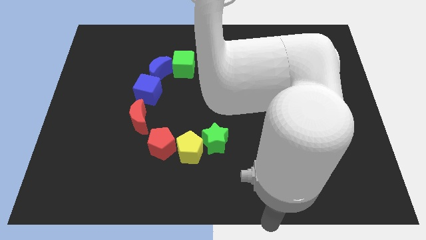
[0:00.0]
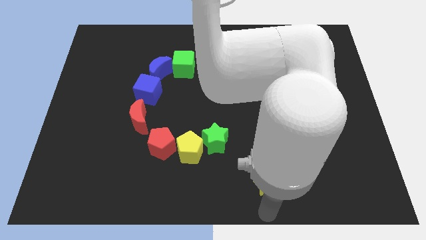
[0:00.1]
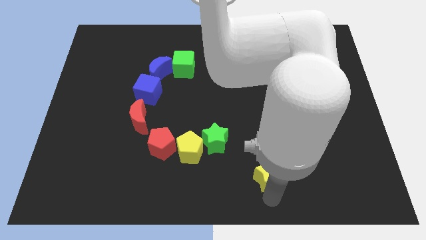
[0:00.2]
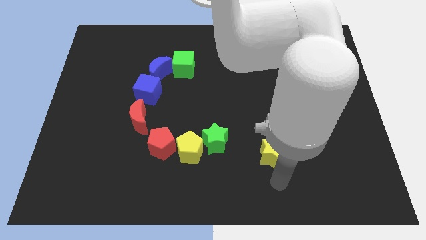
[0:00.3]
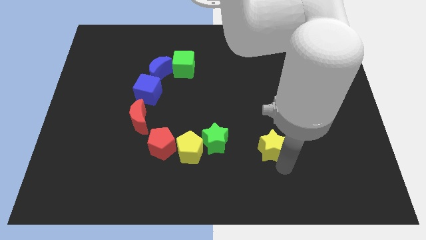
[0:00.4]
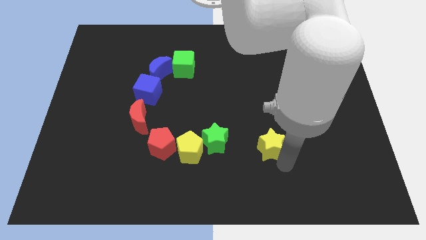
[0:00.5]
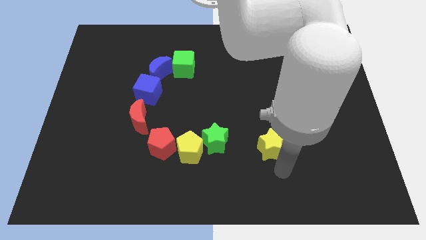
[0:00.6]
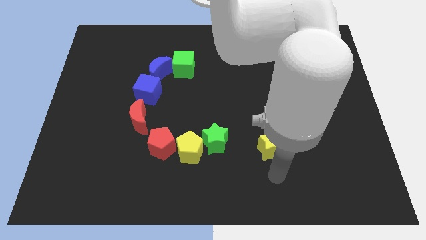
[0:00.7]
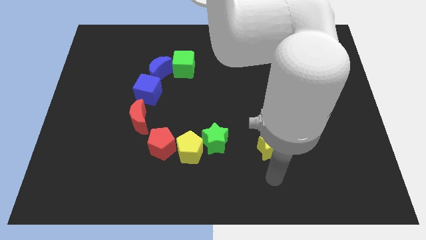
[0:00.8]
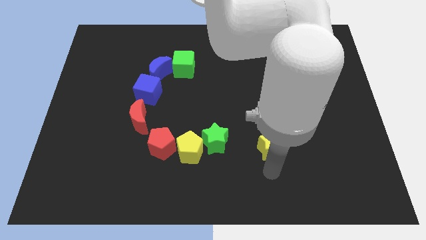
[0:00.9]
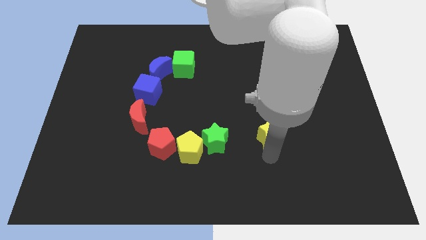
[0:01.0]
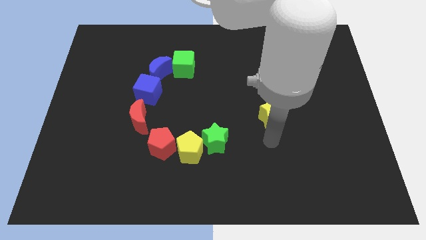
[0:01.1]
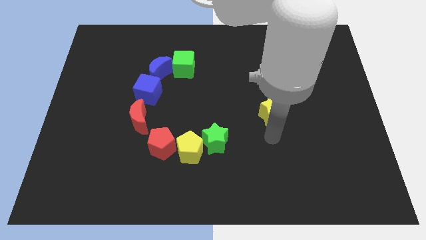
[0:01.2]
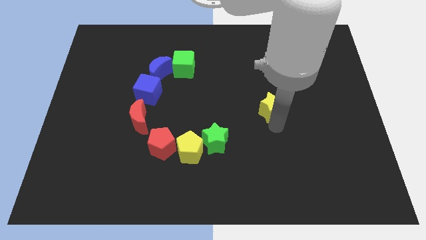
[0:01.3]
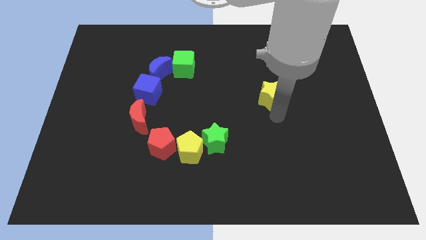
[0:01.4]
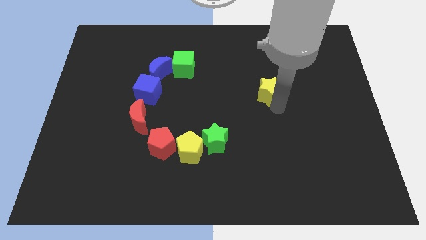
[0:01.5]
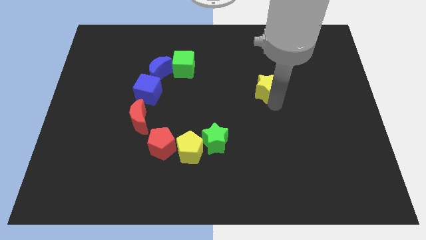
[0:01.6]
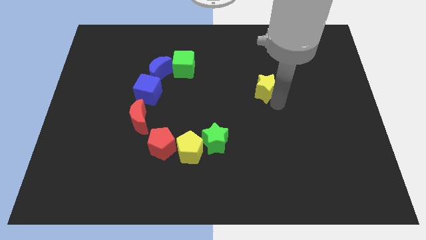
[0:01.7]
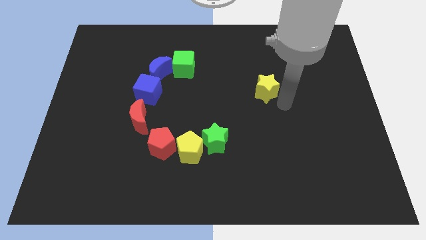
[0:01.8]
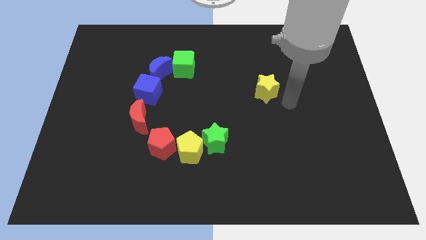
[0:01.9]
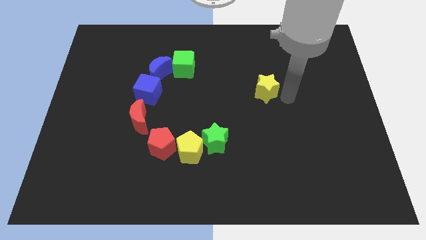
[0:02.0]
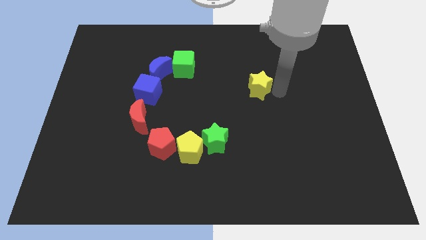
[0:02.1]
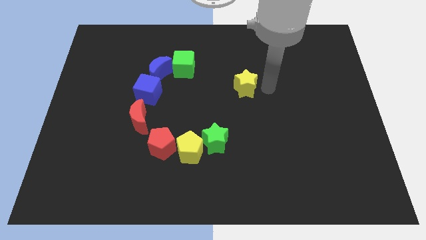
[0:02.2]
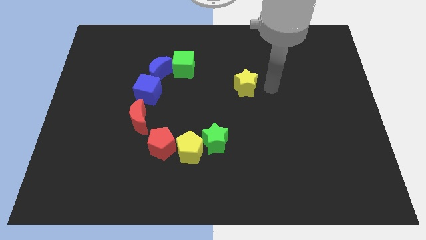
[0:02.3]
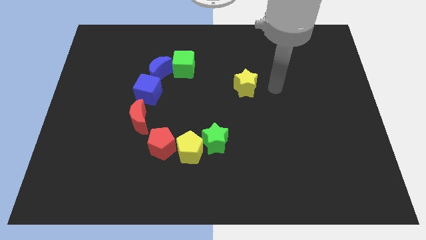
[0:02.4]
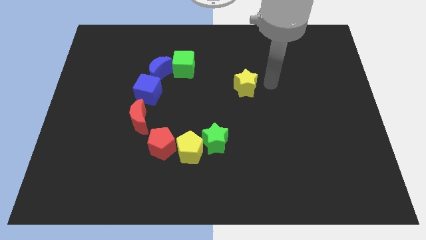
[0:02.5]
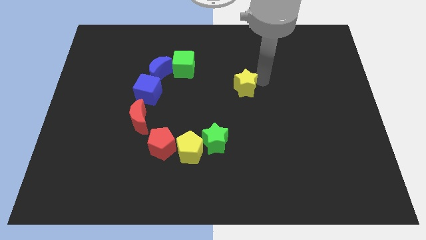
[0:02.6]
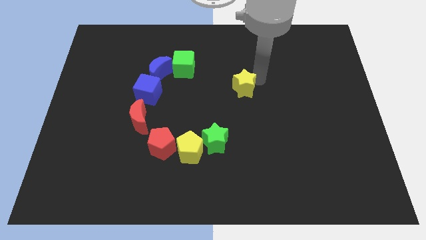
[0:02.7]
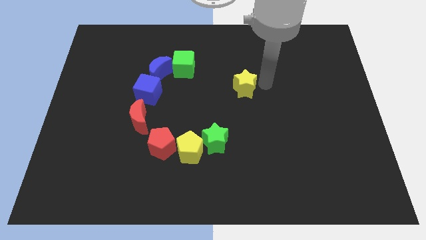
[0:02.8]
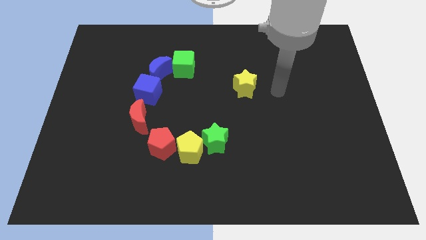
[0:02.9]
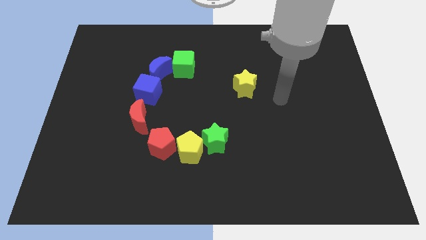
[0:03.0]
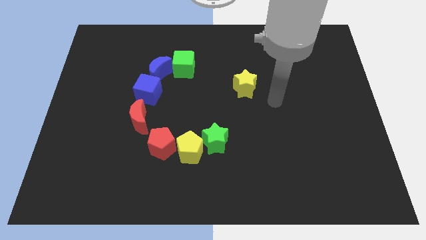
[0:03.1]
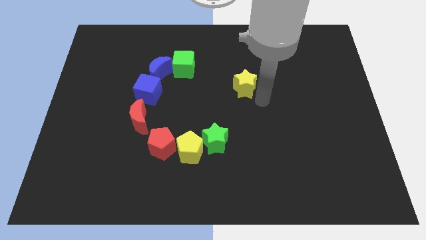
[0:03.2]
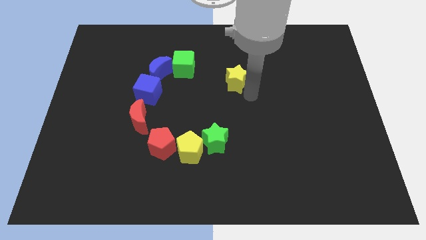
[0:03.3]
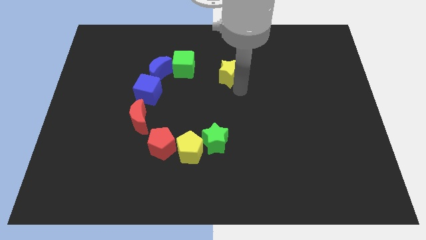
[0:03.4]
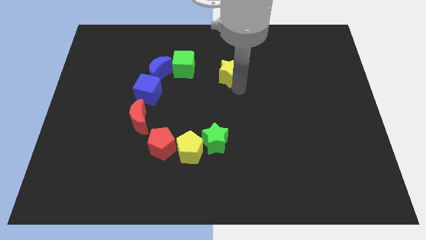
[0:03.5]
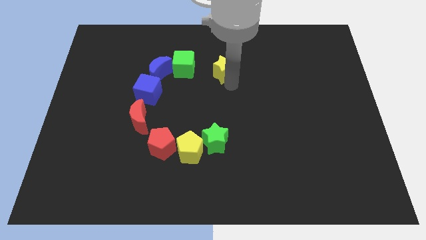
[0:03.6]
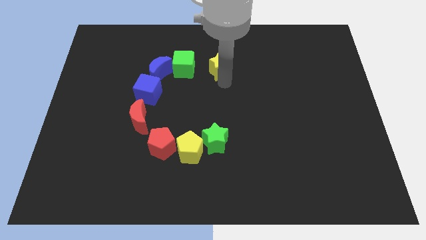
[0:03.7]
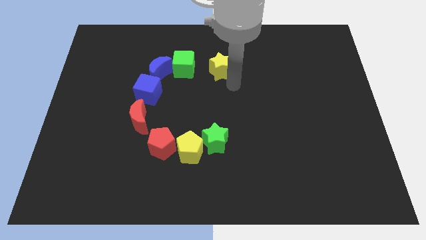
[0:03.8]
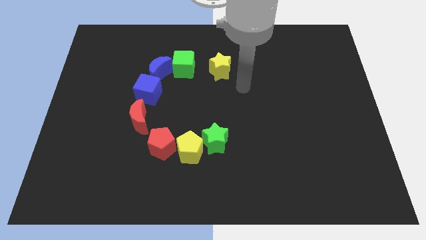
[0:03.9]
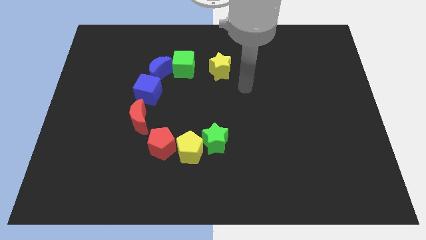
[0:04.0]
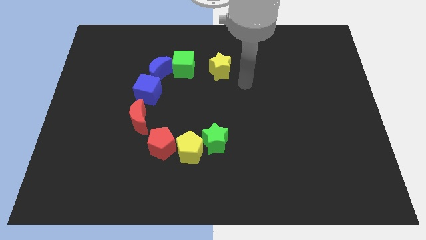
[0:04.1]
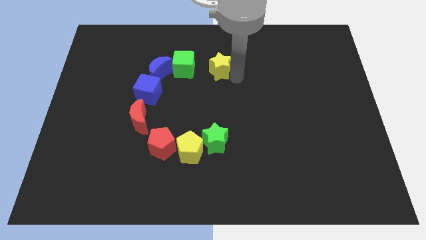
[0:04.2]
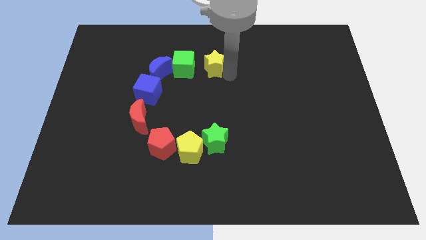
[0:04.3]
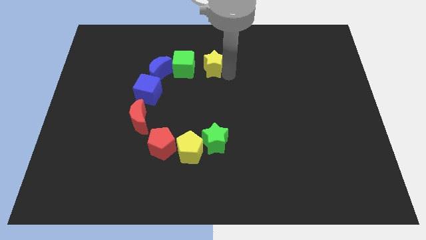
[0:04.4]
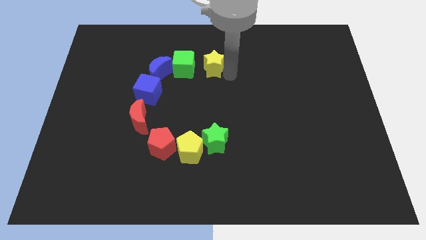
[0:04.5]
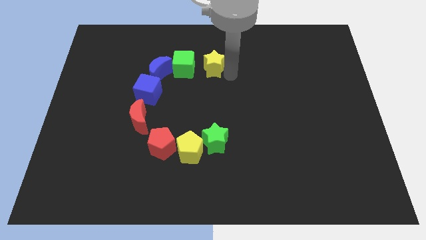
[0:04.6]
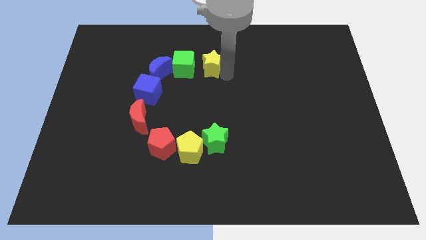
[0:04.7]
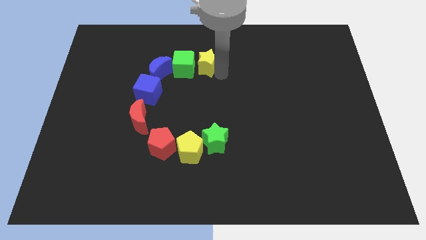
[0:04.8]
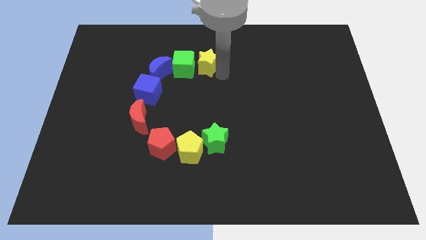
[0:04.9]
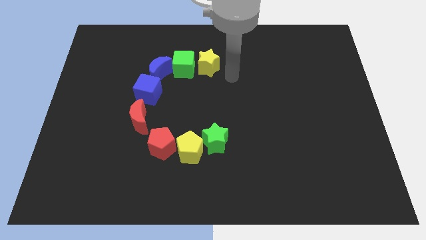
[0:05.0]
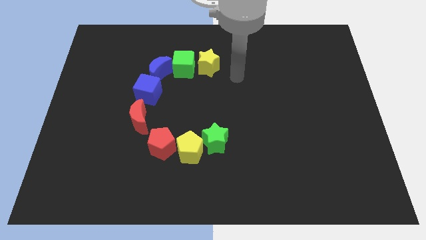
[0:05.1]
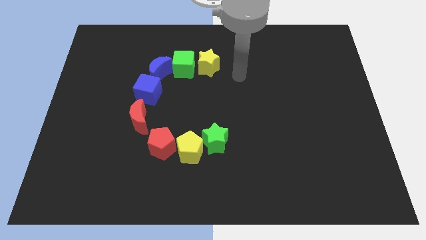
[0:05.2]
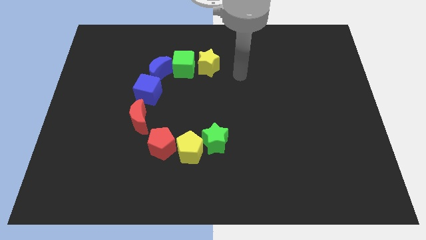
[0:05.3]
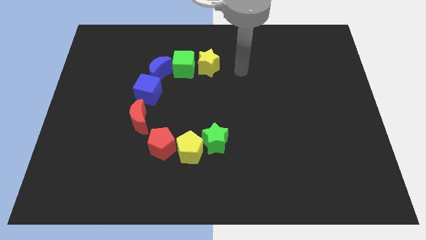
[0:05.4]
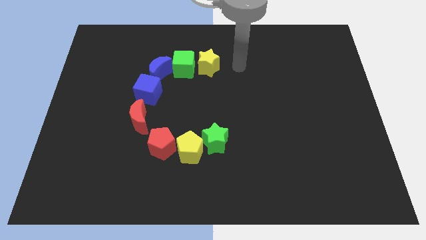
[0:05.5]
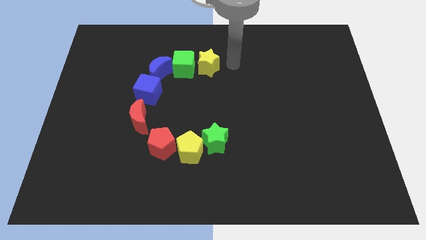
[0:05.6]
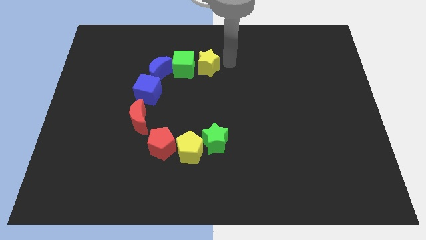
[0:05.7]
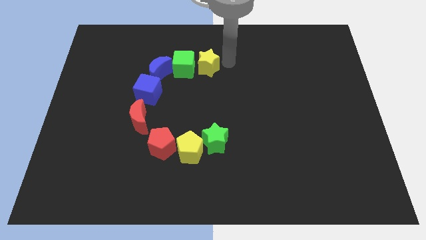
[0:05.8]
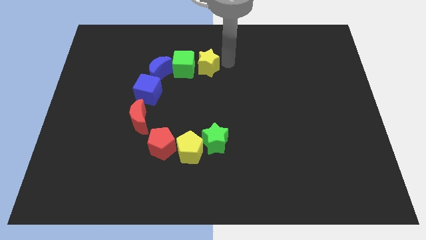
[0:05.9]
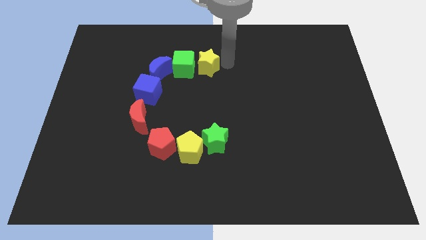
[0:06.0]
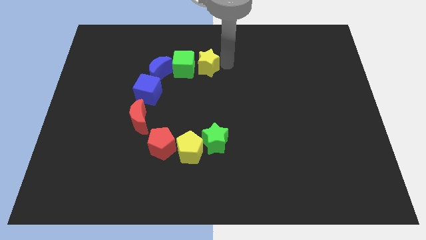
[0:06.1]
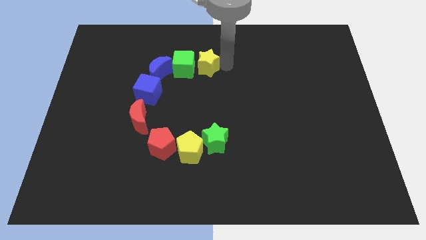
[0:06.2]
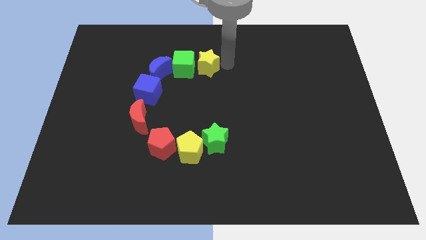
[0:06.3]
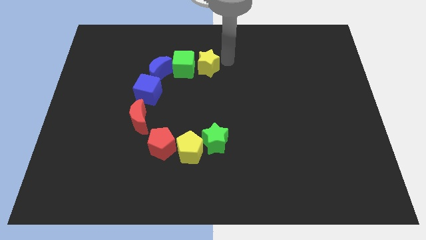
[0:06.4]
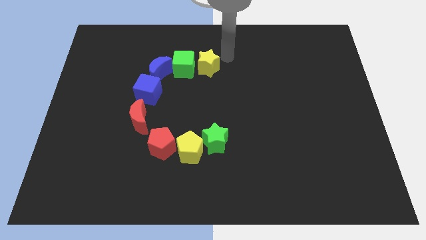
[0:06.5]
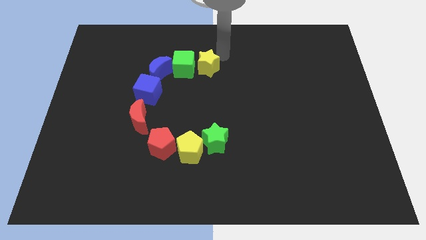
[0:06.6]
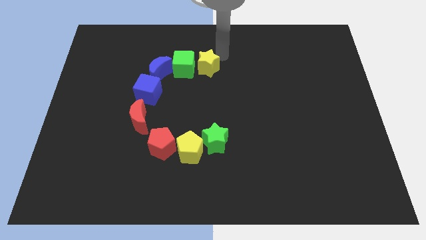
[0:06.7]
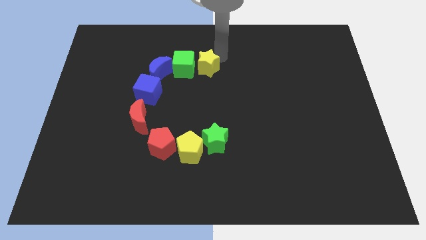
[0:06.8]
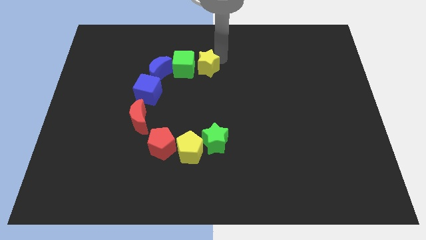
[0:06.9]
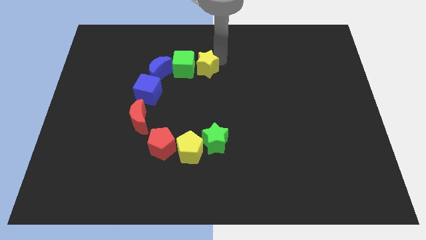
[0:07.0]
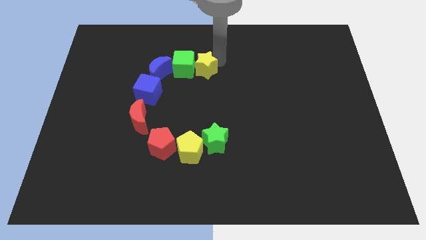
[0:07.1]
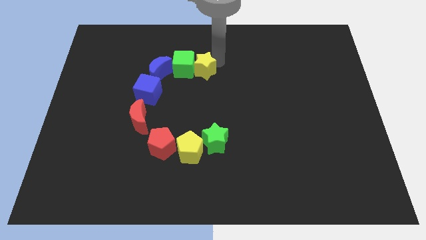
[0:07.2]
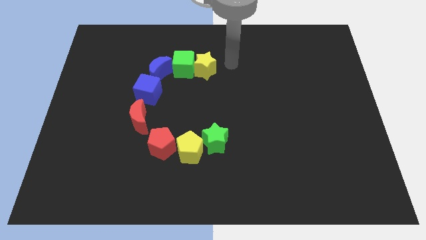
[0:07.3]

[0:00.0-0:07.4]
push the yellow star right to the green cube

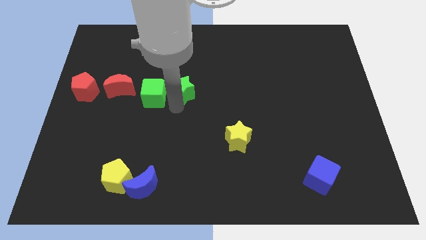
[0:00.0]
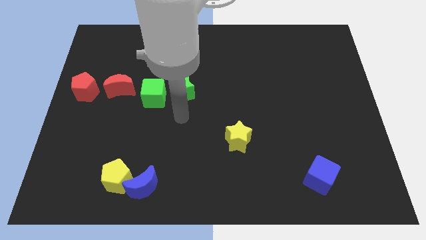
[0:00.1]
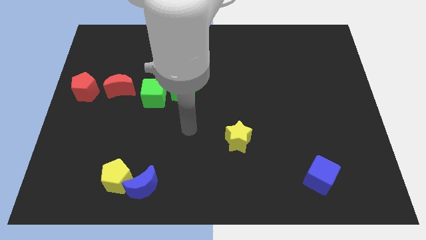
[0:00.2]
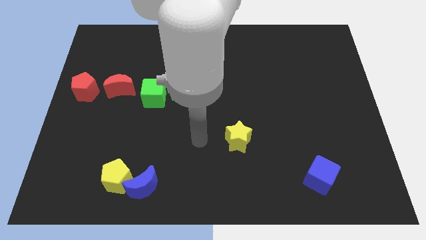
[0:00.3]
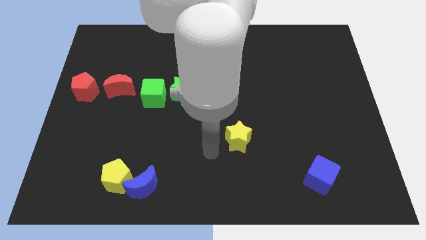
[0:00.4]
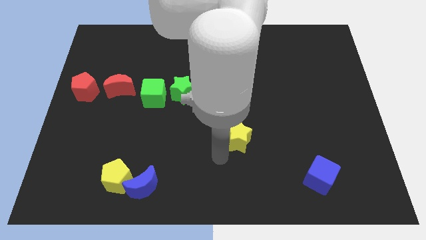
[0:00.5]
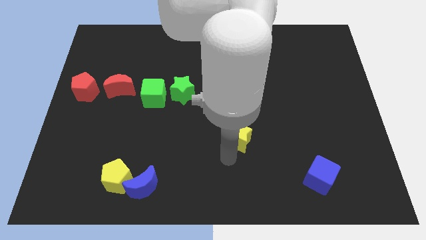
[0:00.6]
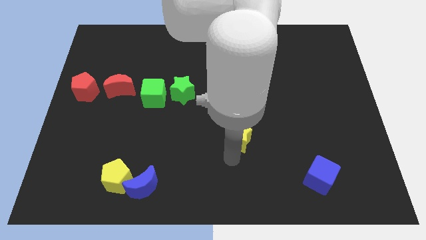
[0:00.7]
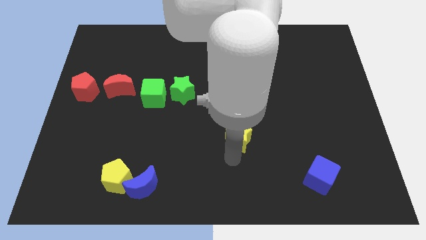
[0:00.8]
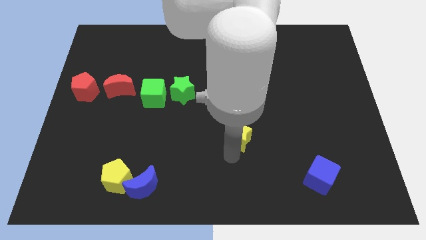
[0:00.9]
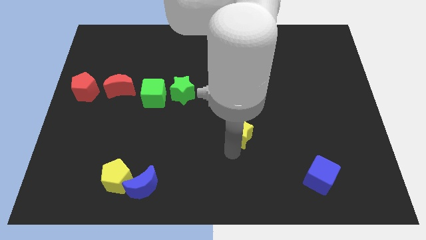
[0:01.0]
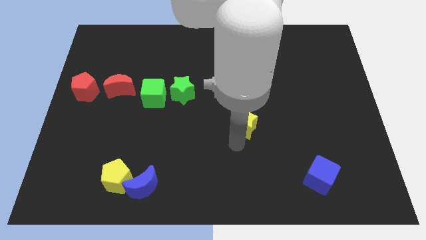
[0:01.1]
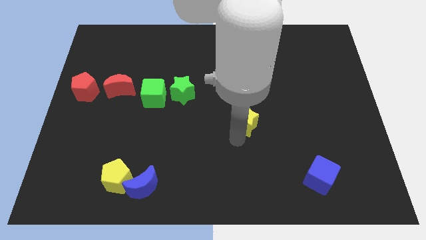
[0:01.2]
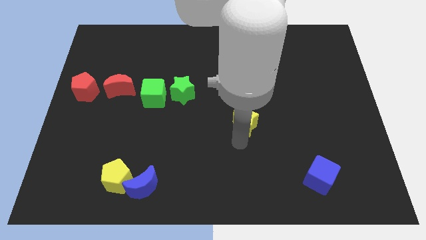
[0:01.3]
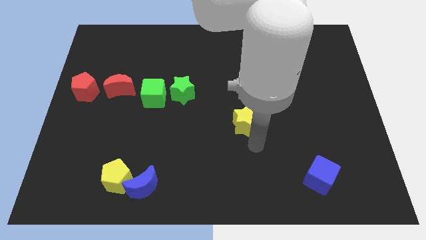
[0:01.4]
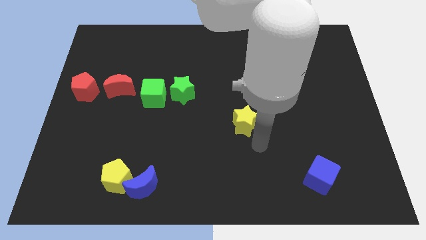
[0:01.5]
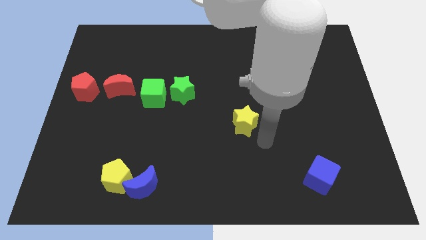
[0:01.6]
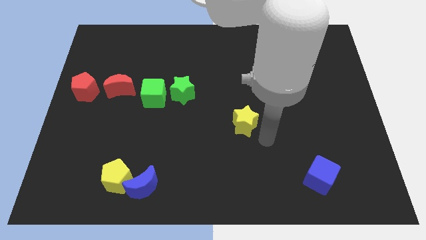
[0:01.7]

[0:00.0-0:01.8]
push the yellow star slightly to the top
